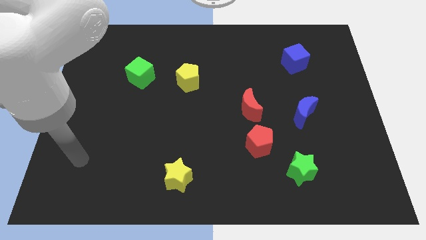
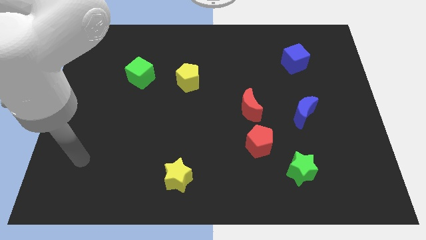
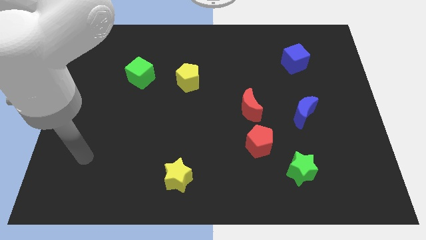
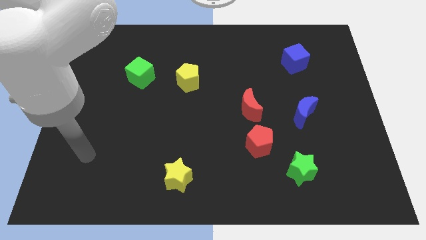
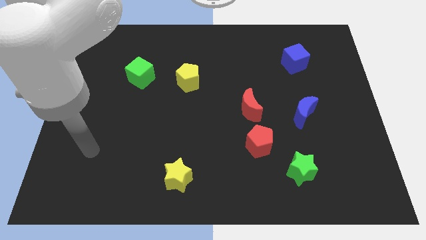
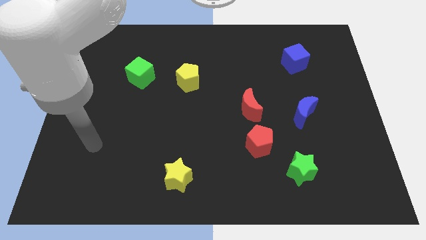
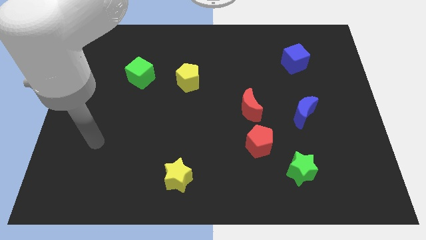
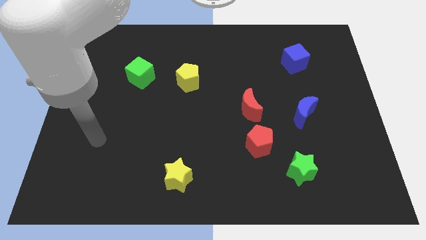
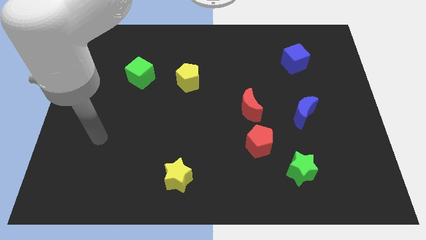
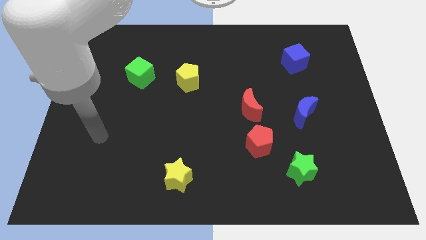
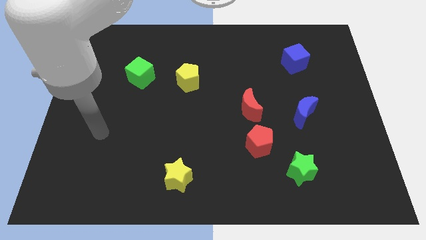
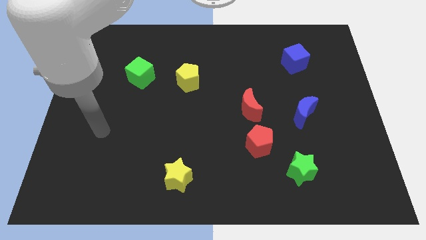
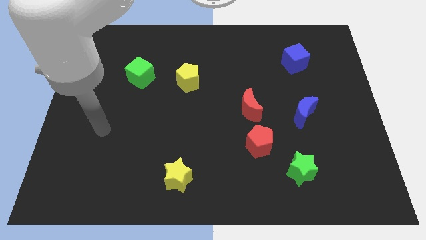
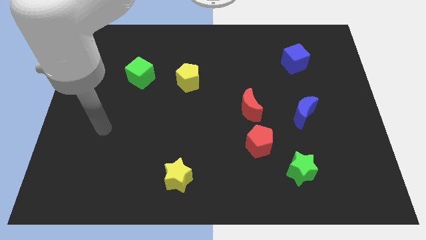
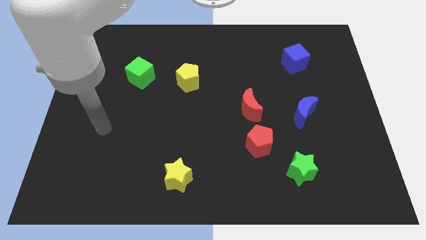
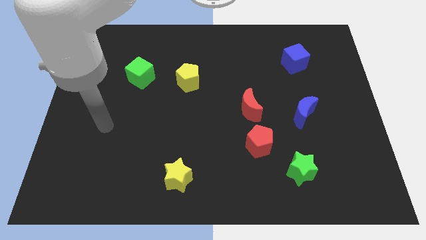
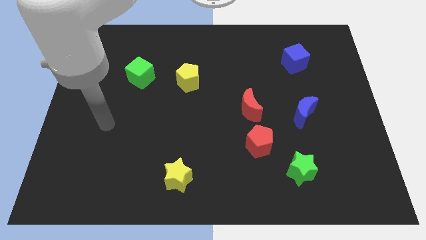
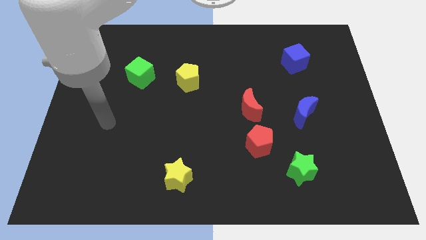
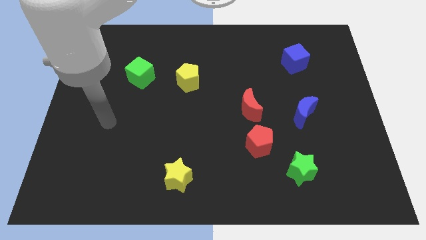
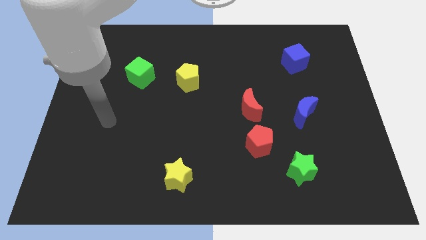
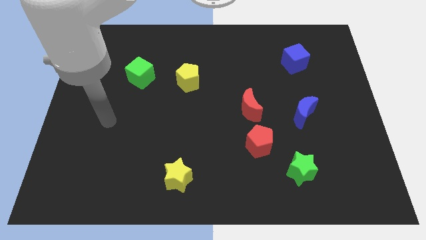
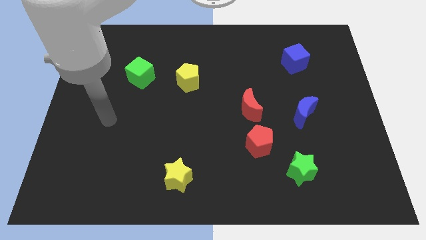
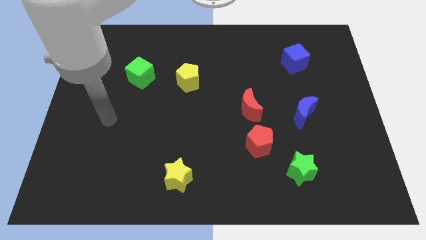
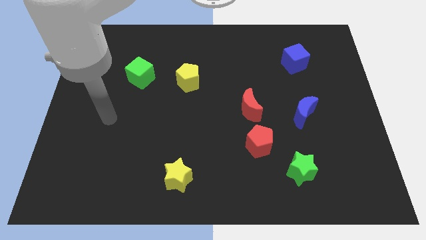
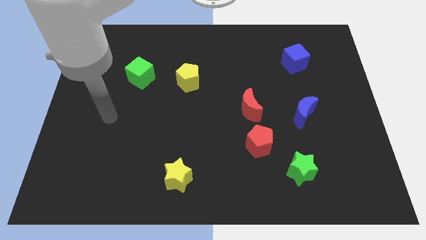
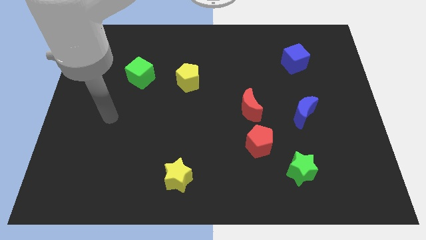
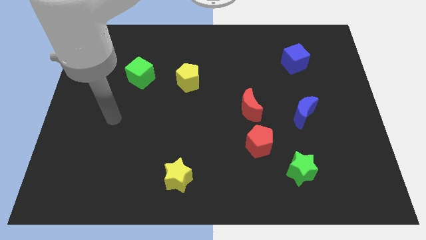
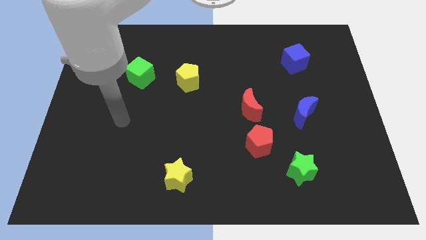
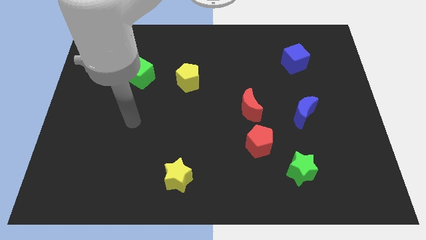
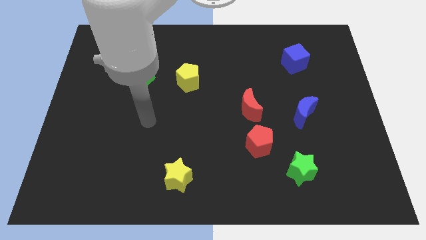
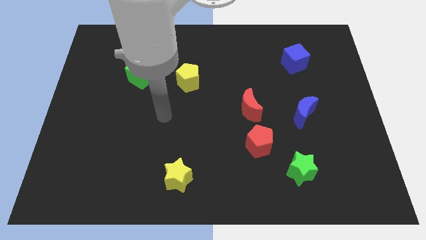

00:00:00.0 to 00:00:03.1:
move your arm towards the center of the board

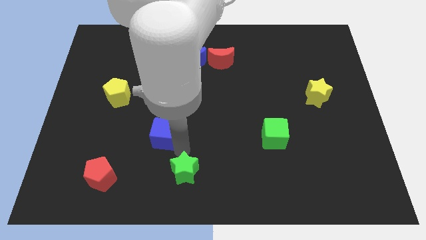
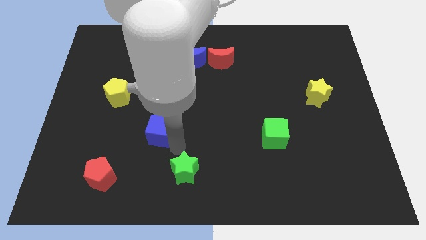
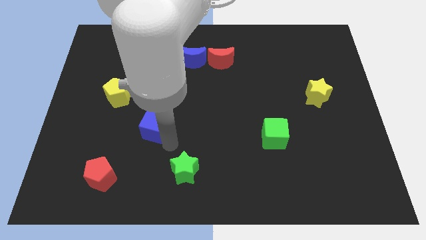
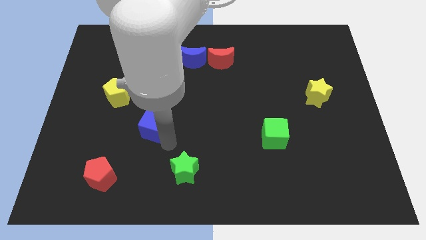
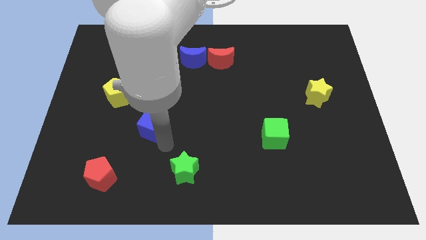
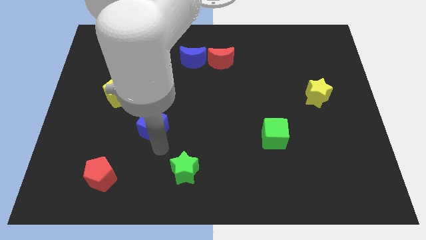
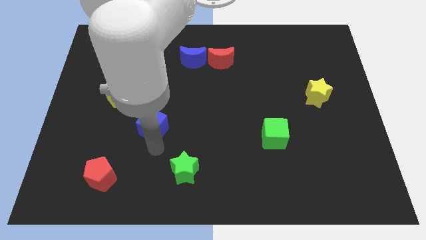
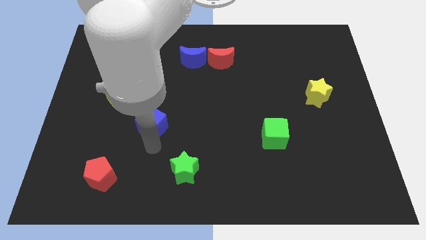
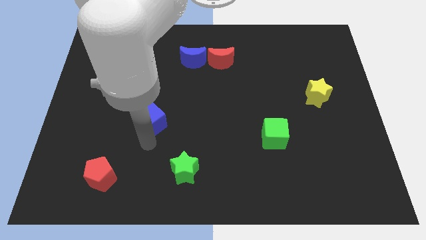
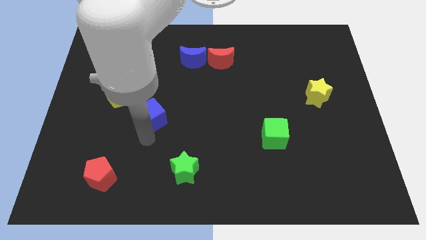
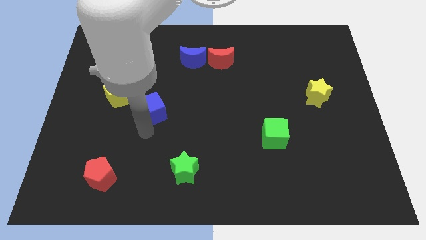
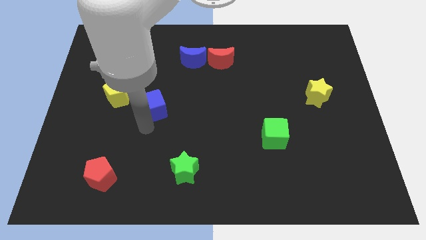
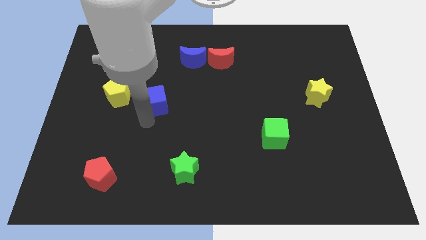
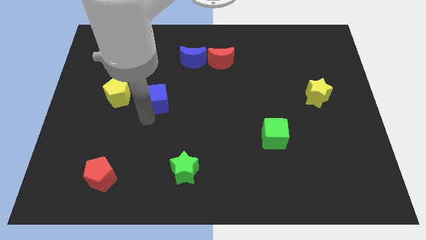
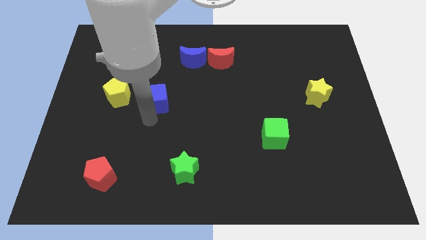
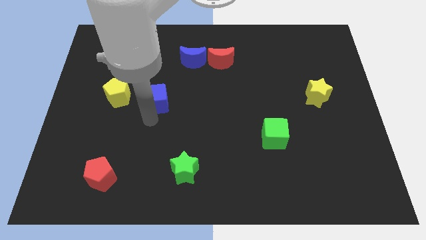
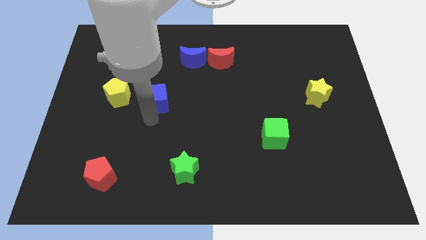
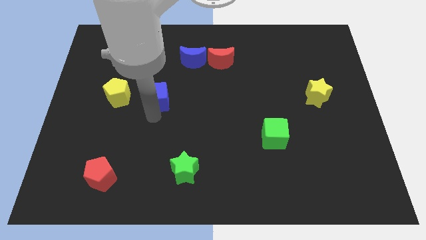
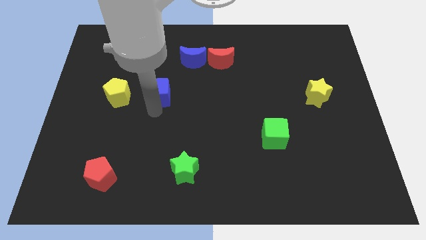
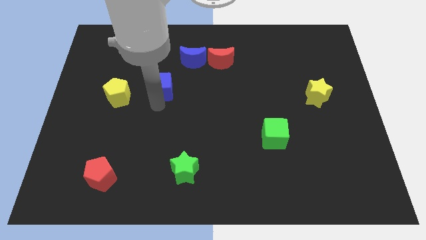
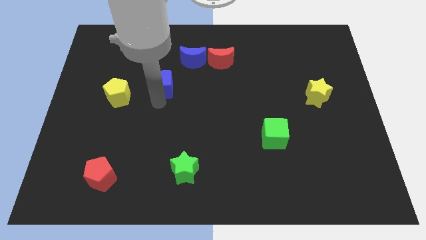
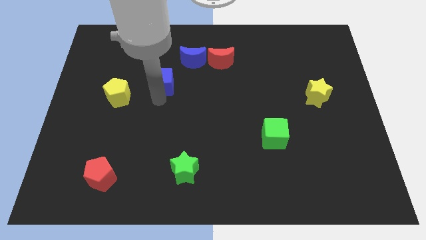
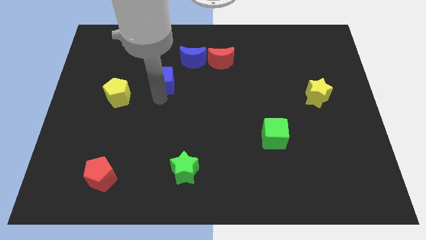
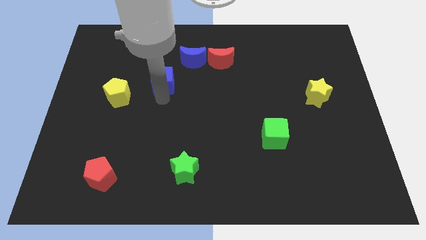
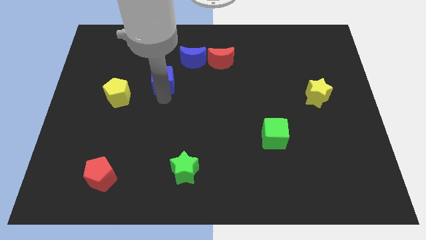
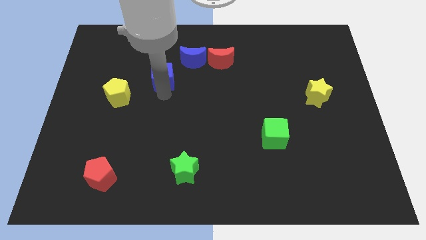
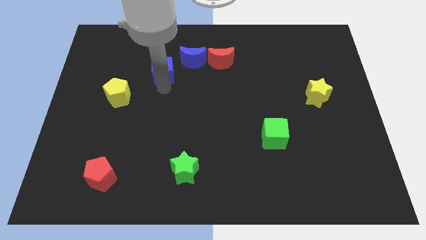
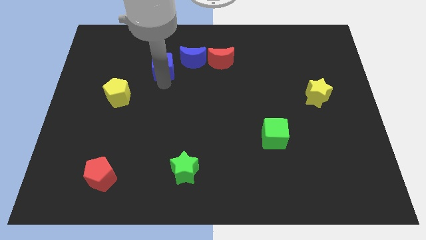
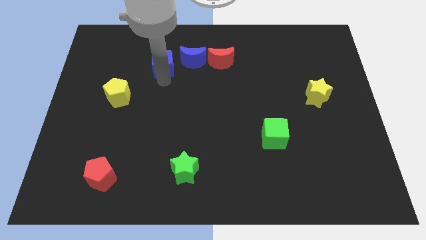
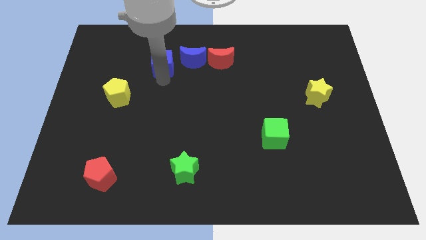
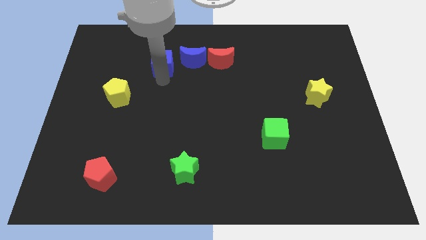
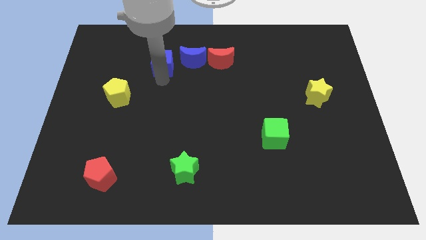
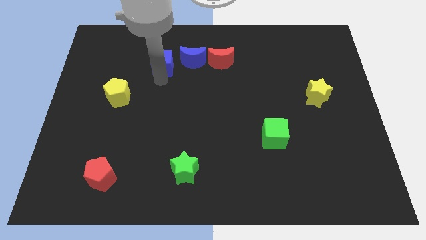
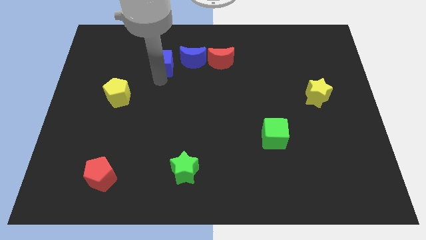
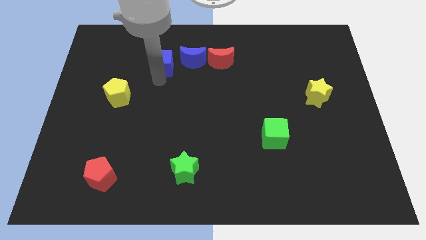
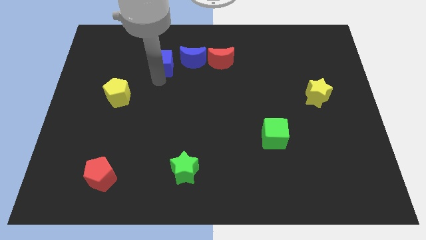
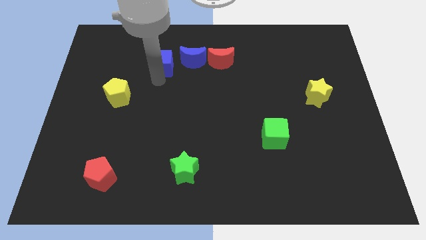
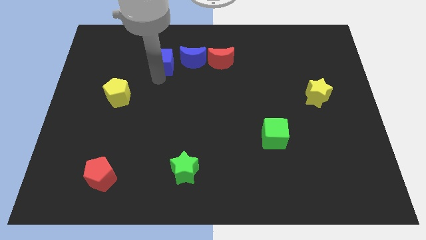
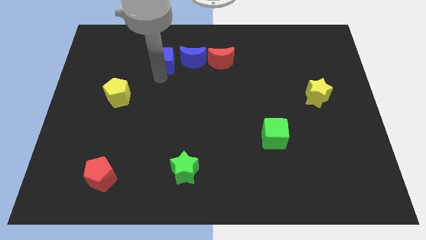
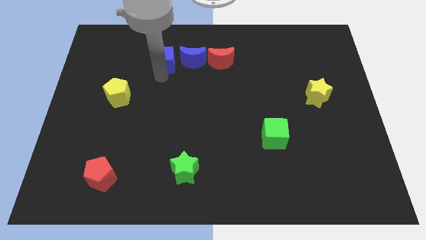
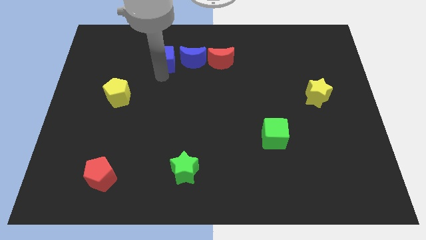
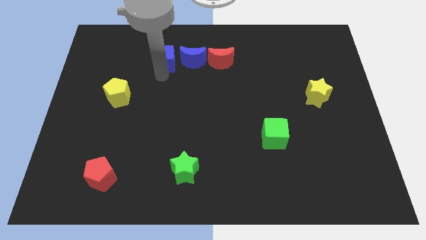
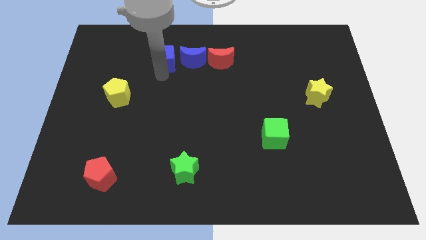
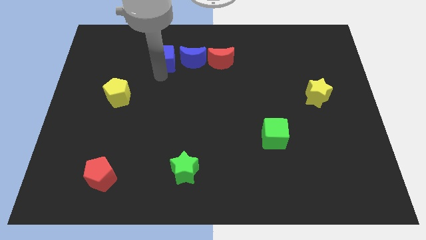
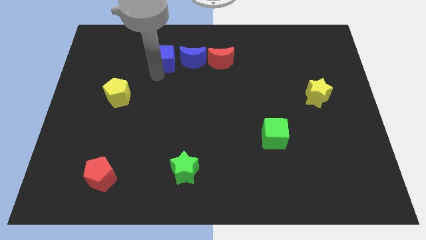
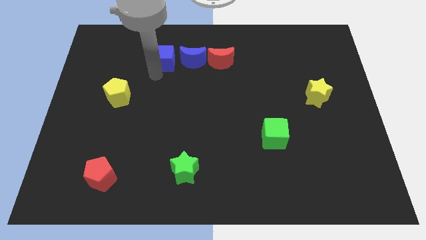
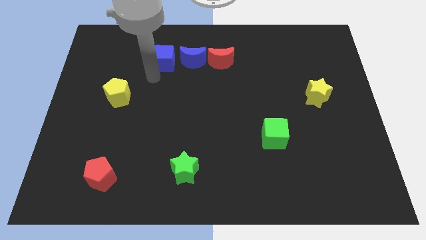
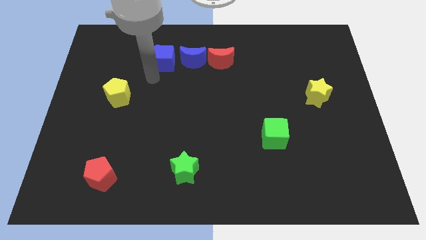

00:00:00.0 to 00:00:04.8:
move the blue cube to the left of the blue crescent

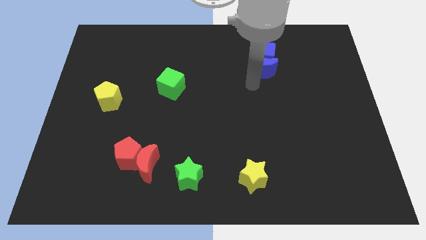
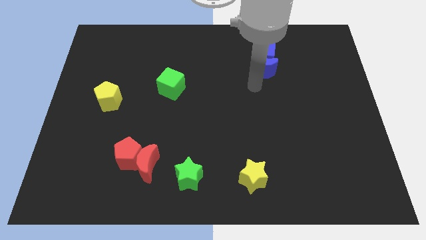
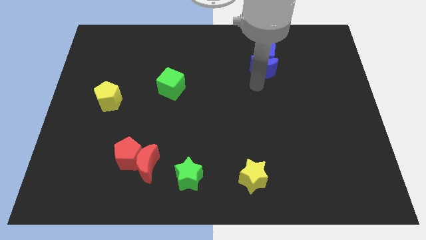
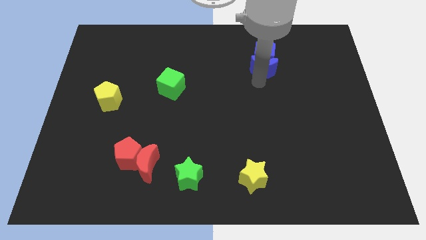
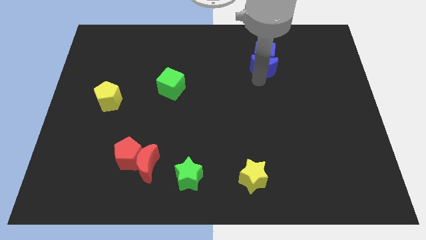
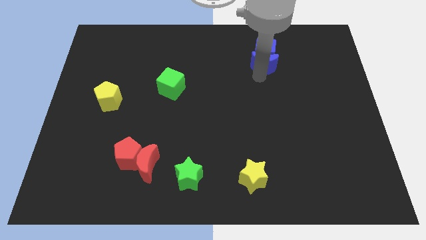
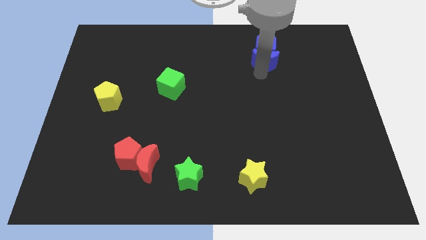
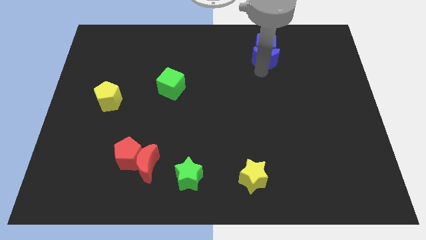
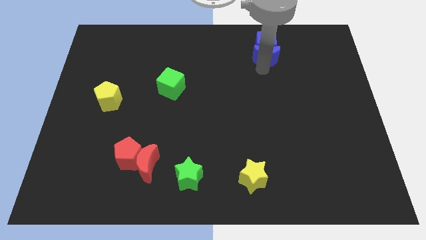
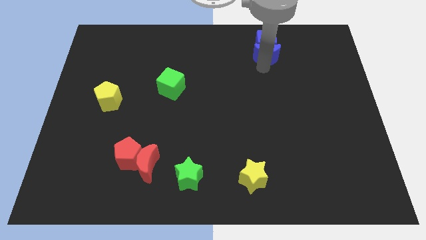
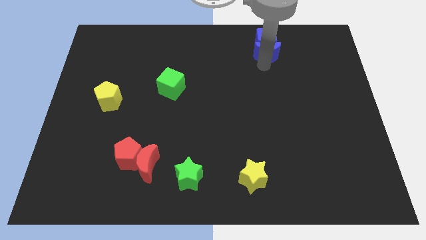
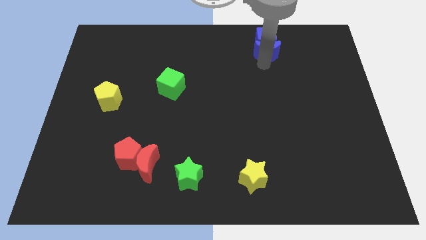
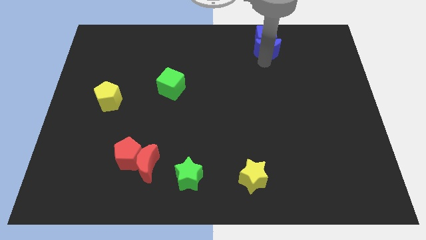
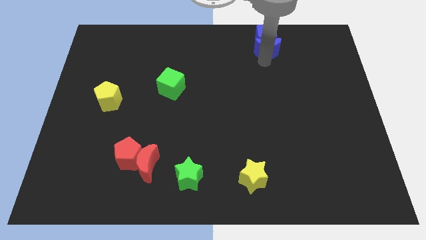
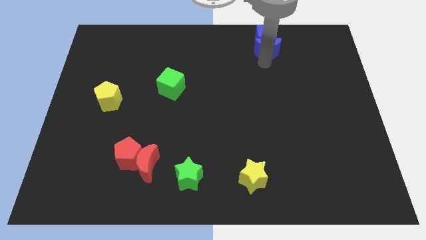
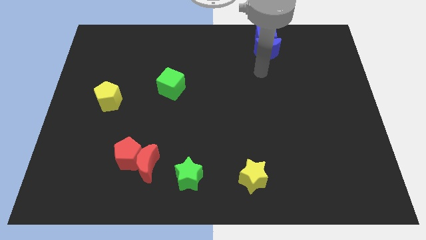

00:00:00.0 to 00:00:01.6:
push the blue moon into the blue cube
